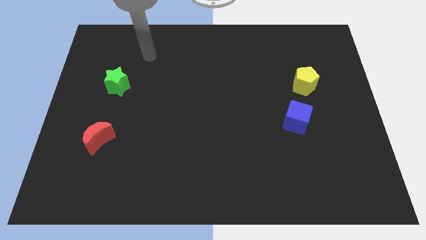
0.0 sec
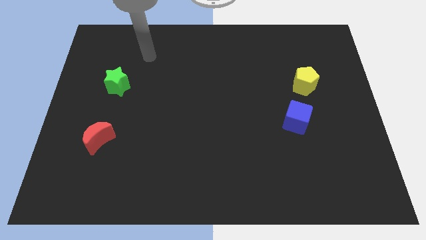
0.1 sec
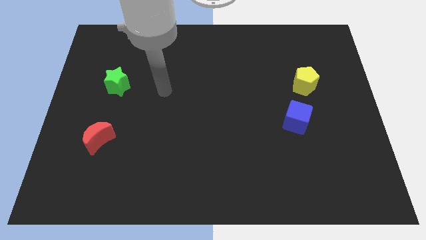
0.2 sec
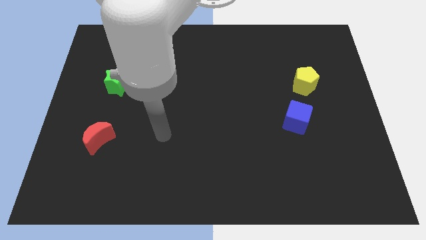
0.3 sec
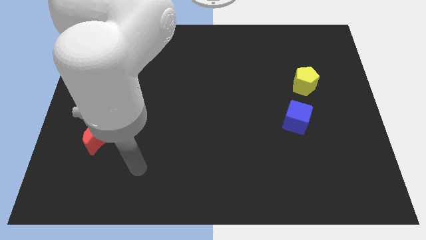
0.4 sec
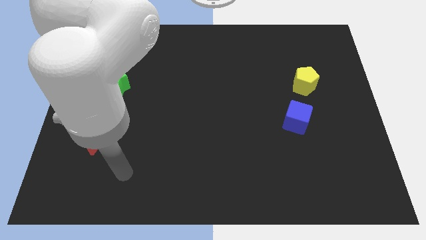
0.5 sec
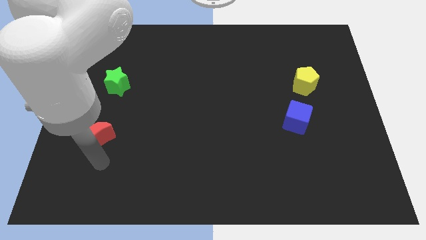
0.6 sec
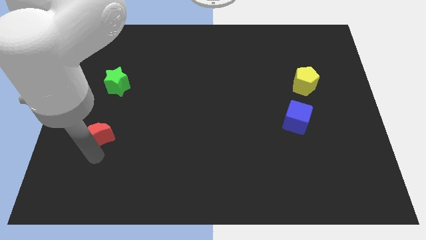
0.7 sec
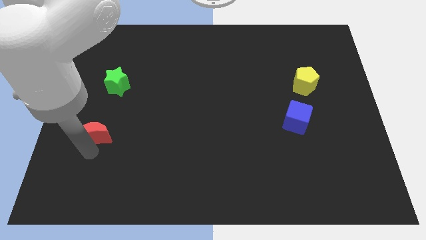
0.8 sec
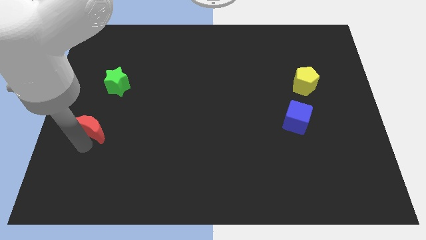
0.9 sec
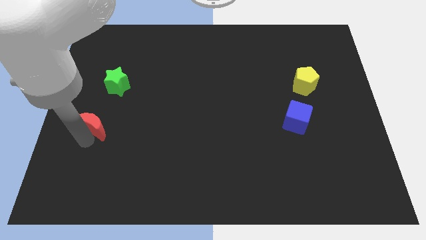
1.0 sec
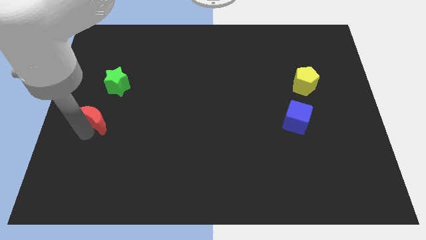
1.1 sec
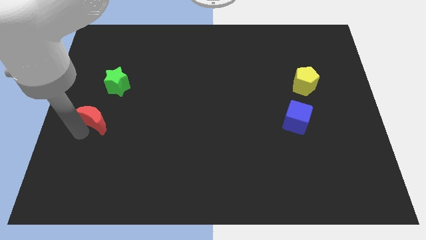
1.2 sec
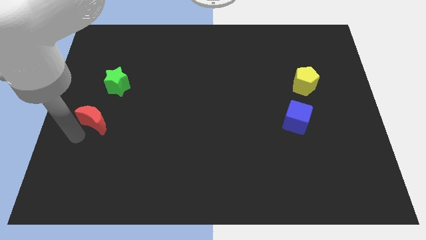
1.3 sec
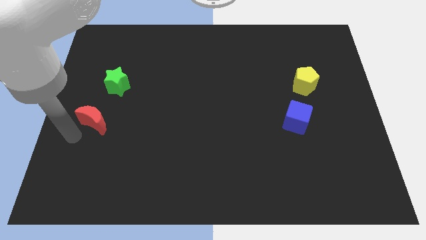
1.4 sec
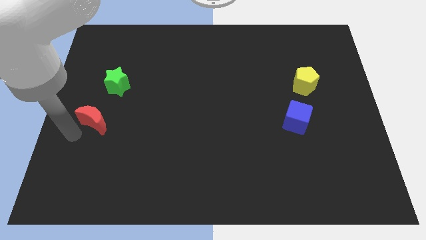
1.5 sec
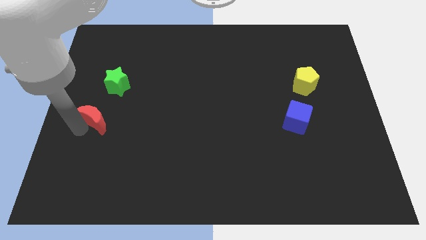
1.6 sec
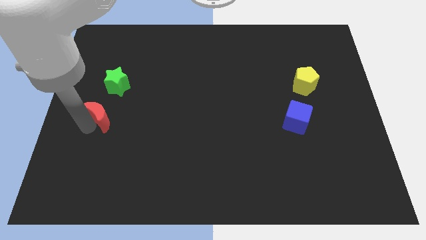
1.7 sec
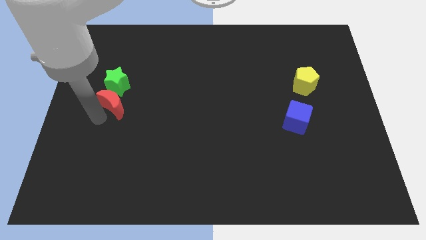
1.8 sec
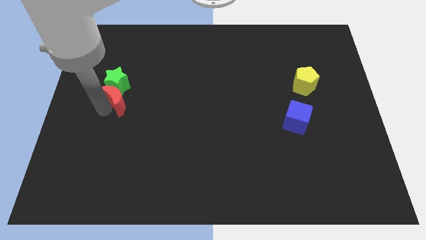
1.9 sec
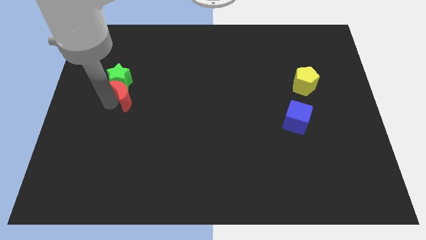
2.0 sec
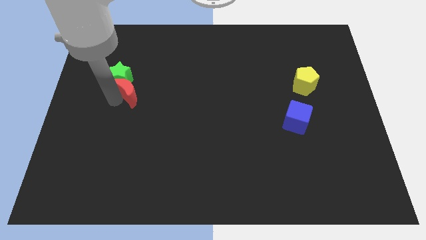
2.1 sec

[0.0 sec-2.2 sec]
move the red block close to the green star

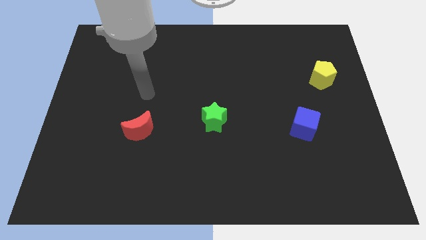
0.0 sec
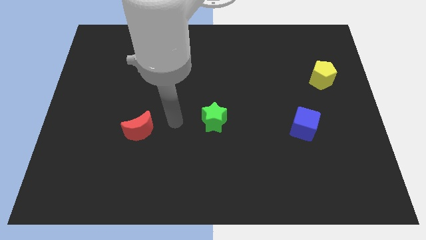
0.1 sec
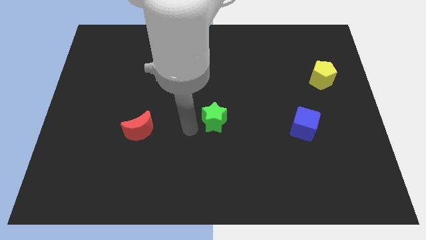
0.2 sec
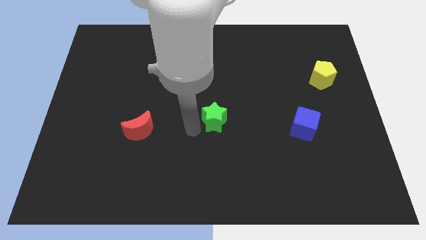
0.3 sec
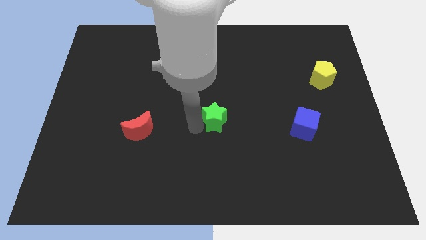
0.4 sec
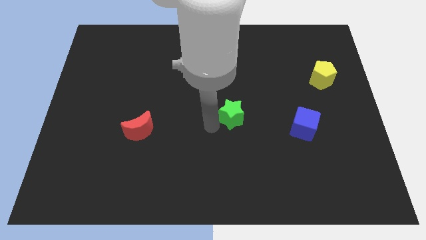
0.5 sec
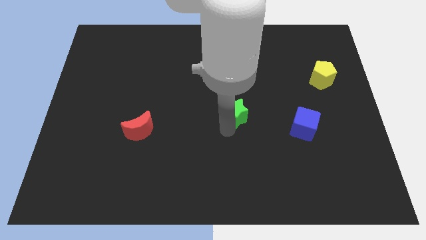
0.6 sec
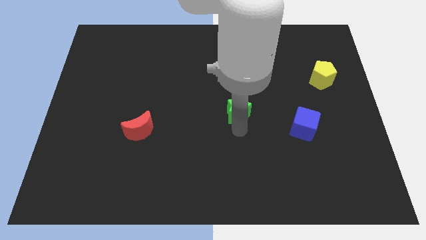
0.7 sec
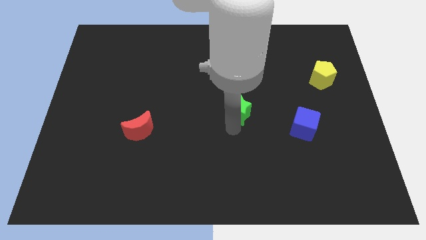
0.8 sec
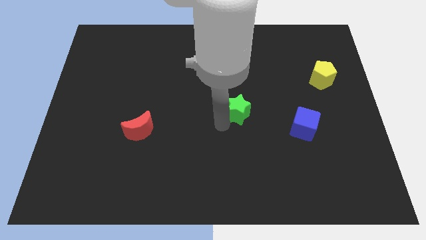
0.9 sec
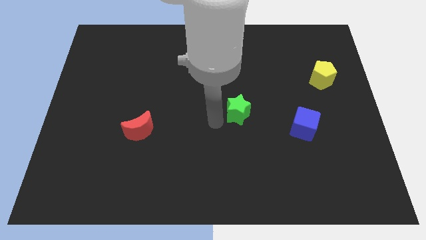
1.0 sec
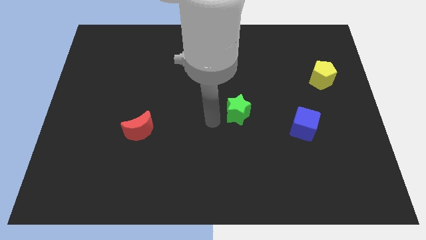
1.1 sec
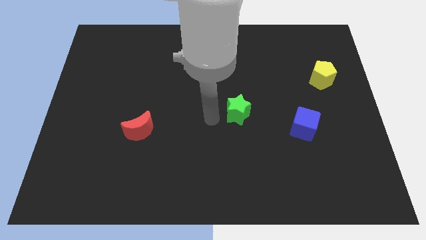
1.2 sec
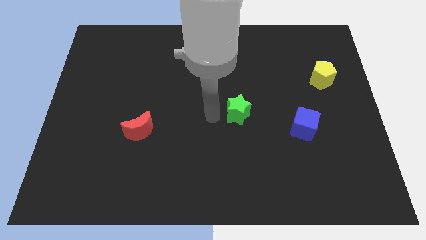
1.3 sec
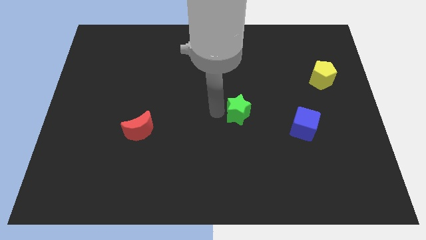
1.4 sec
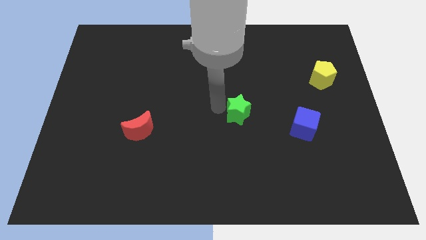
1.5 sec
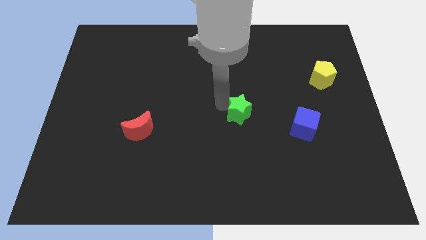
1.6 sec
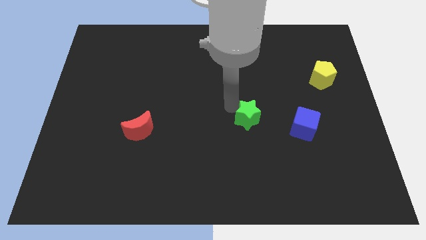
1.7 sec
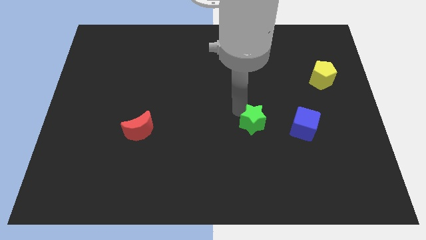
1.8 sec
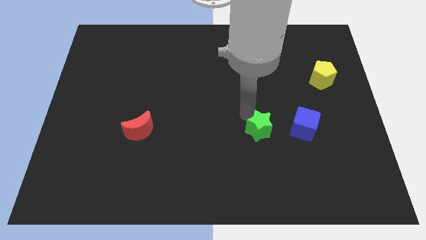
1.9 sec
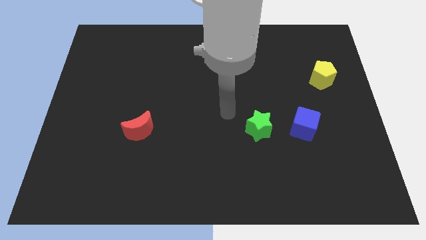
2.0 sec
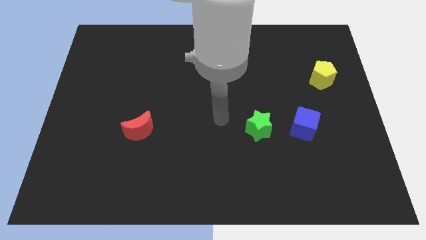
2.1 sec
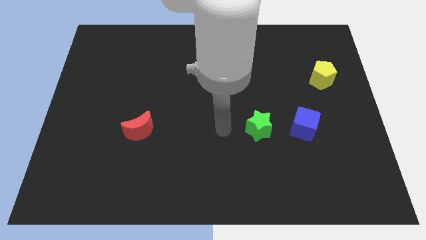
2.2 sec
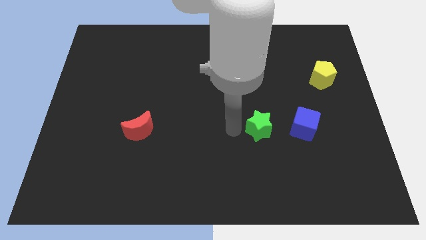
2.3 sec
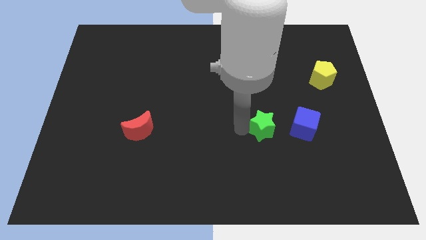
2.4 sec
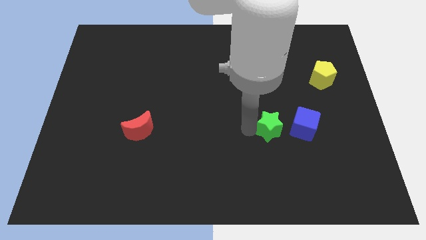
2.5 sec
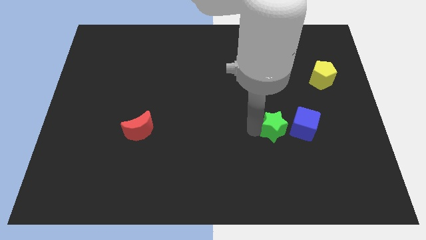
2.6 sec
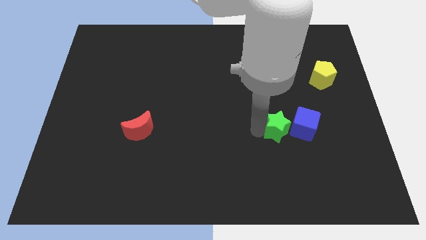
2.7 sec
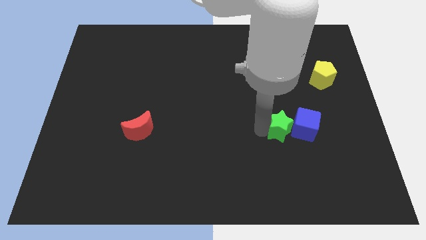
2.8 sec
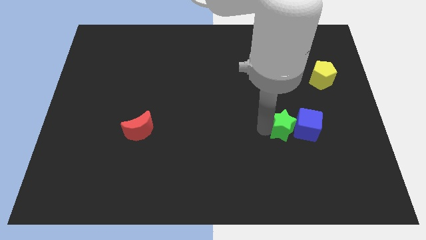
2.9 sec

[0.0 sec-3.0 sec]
put the star close to the cube

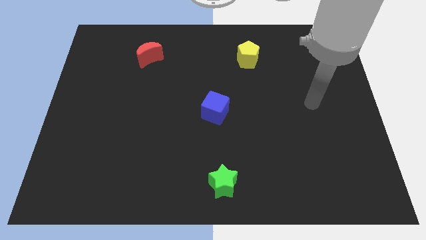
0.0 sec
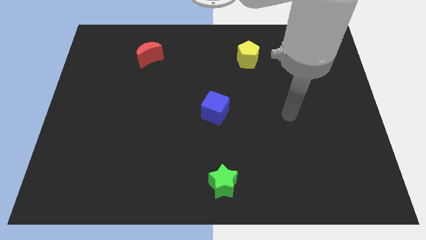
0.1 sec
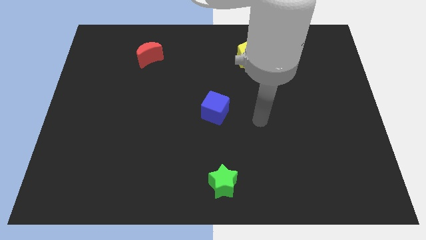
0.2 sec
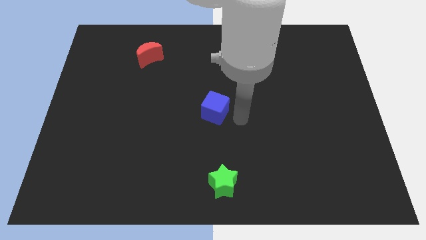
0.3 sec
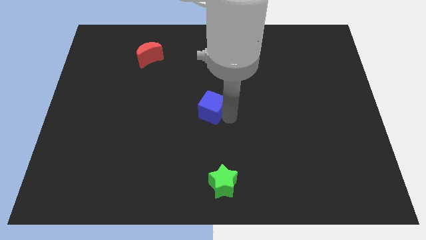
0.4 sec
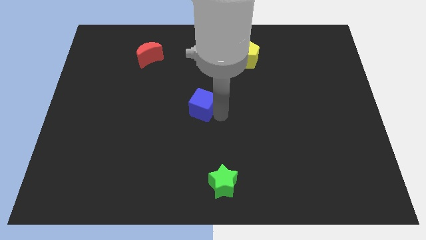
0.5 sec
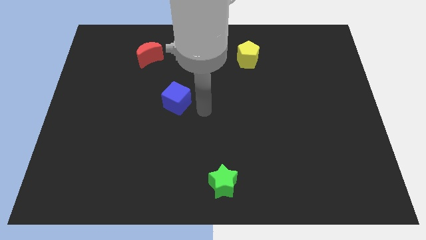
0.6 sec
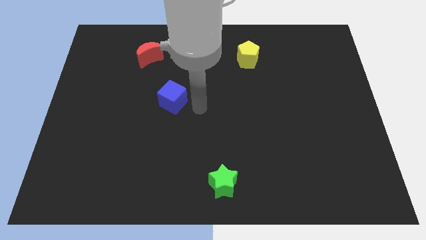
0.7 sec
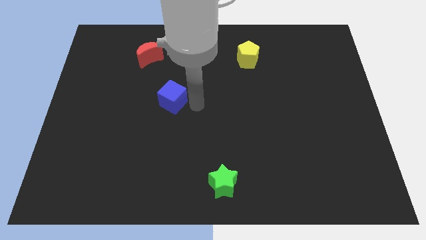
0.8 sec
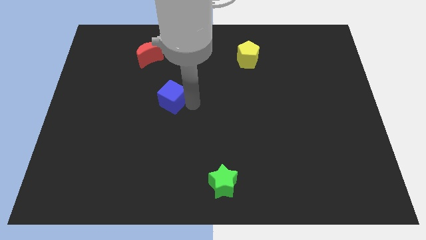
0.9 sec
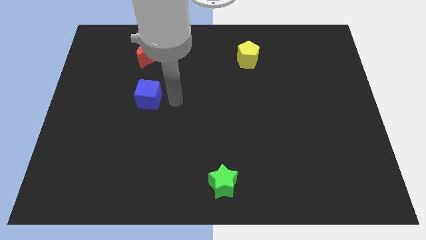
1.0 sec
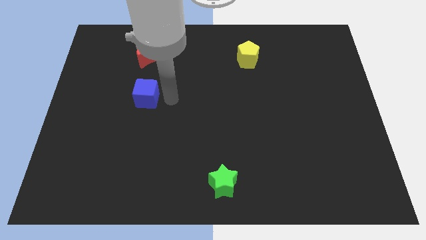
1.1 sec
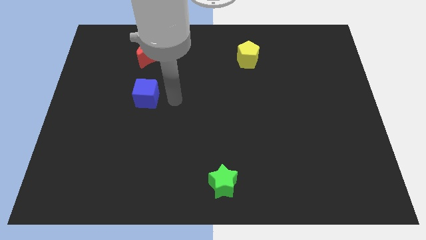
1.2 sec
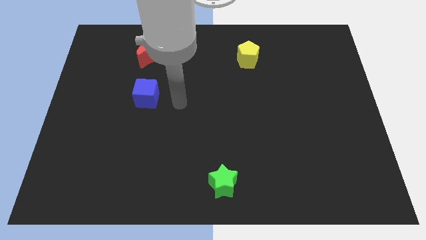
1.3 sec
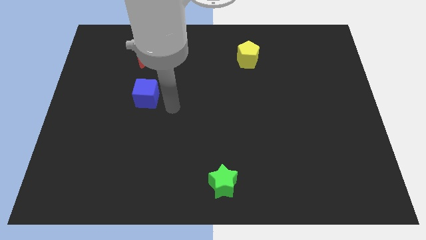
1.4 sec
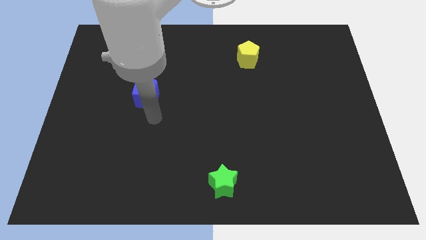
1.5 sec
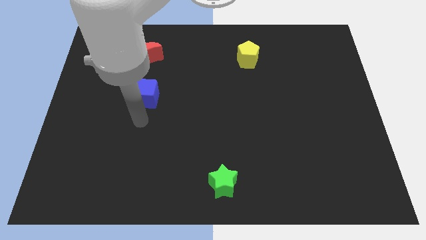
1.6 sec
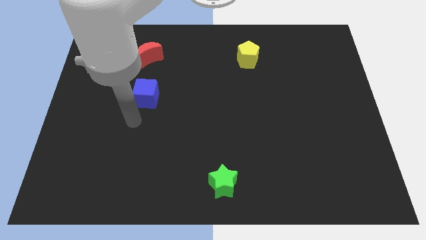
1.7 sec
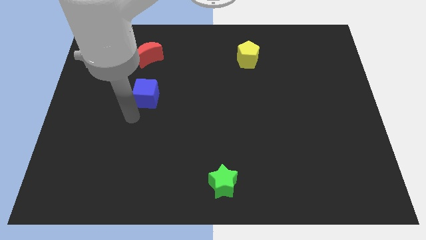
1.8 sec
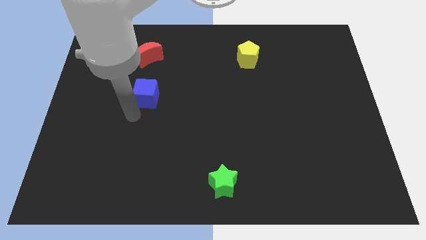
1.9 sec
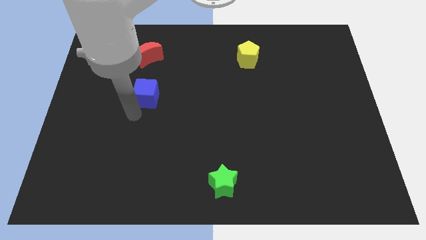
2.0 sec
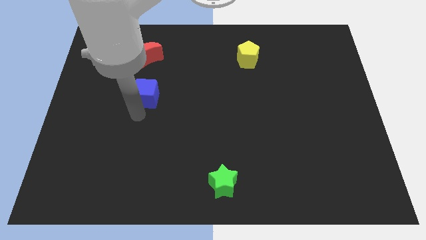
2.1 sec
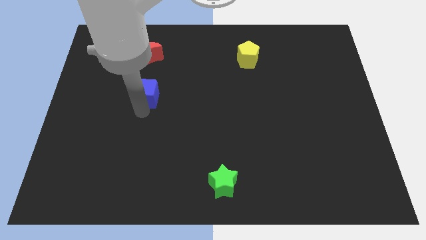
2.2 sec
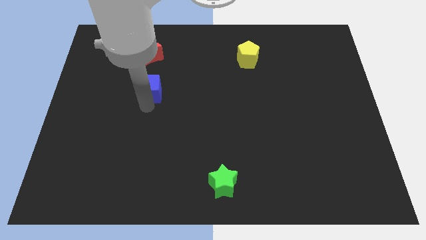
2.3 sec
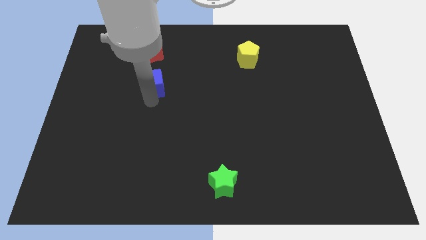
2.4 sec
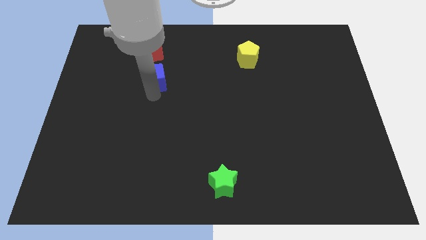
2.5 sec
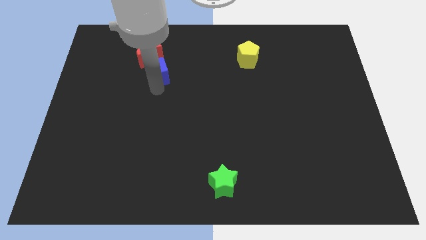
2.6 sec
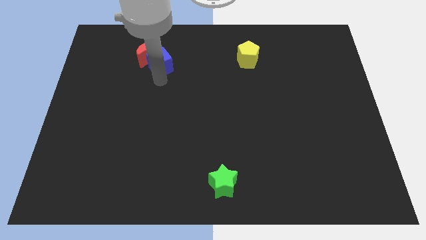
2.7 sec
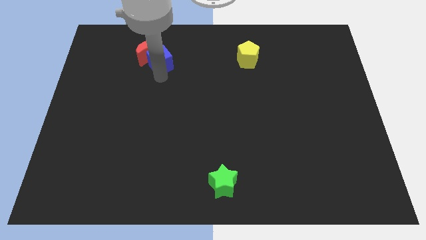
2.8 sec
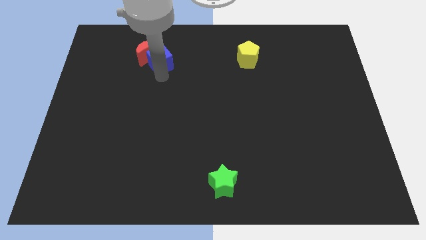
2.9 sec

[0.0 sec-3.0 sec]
move the blue cube next to the moon

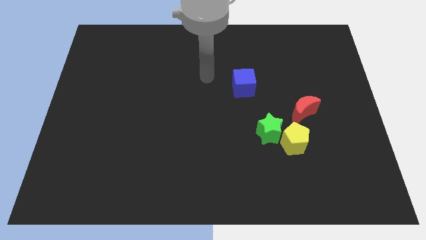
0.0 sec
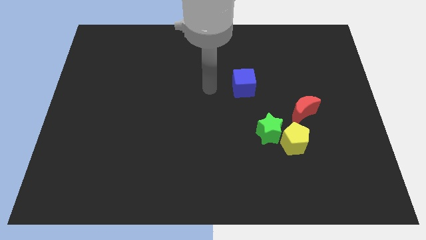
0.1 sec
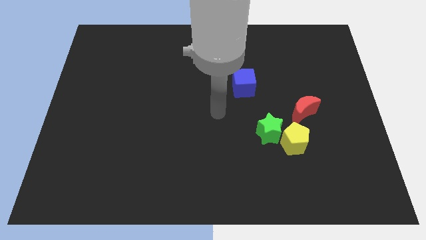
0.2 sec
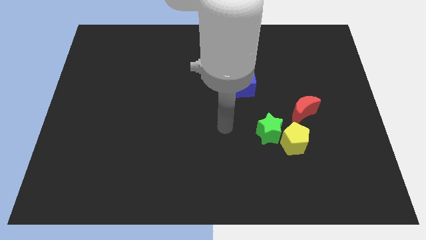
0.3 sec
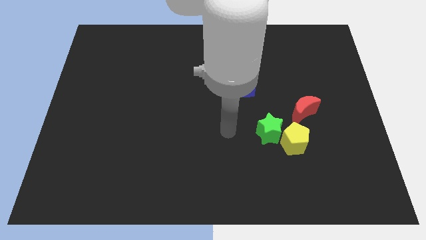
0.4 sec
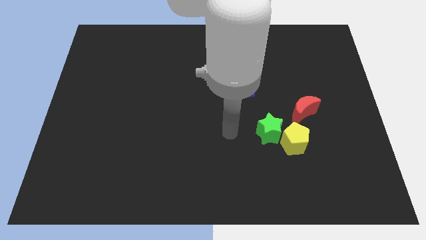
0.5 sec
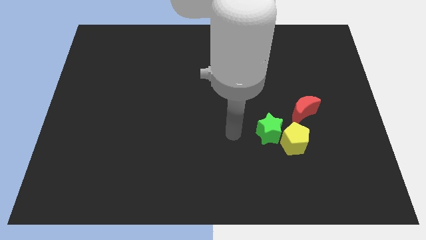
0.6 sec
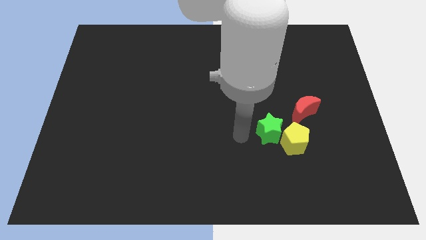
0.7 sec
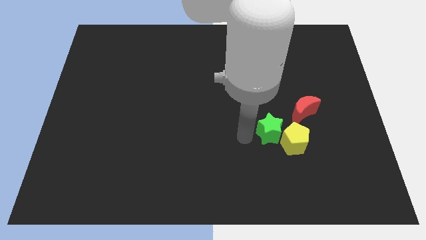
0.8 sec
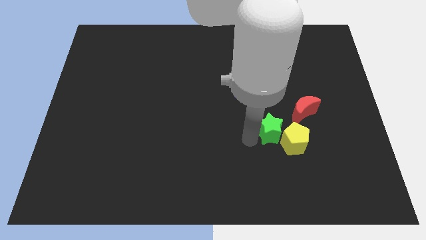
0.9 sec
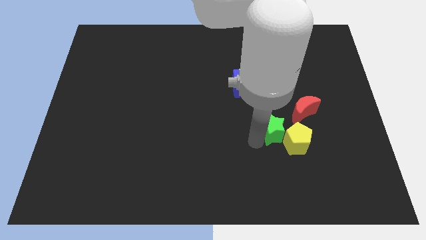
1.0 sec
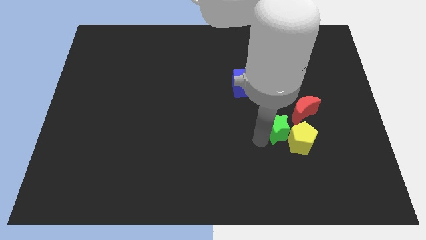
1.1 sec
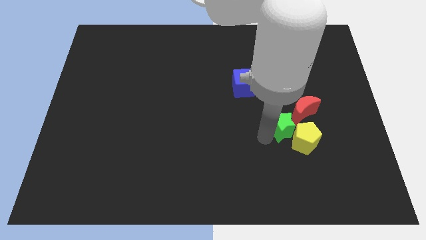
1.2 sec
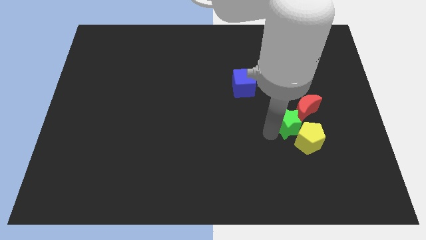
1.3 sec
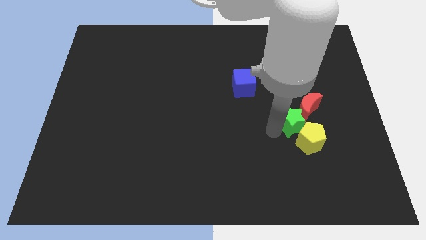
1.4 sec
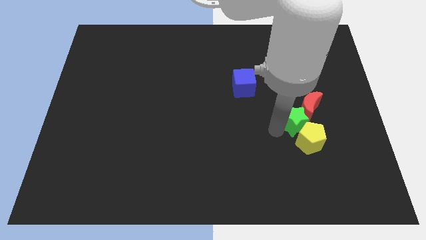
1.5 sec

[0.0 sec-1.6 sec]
put the green star to the red block
